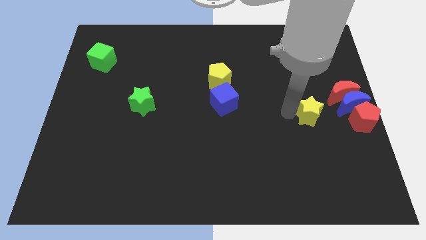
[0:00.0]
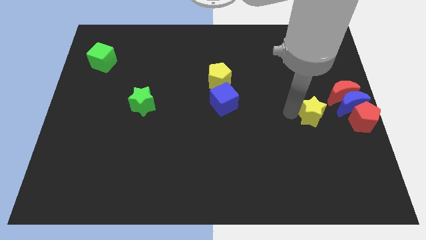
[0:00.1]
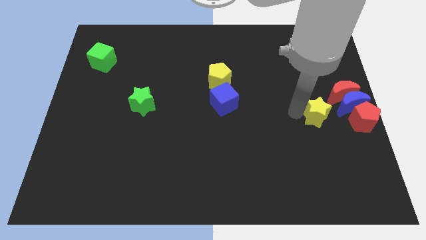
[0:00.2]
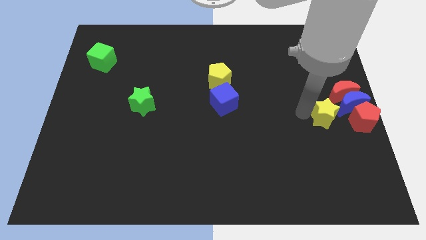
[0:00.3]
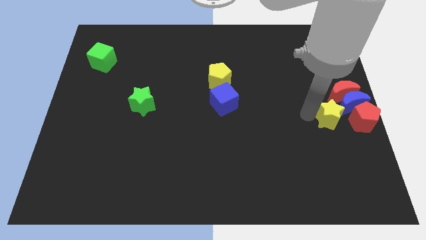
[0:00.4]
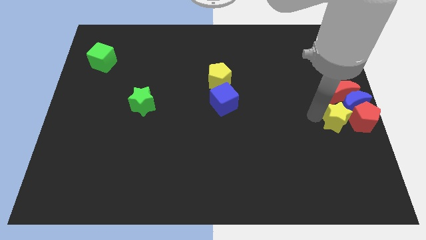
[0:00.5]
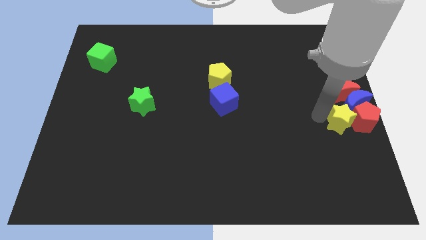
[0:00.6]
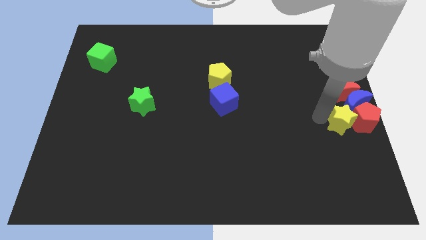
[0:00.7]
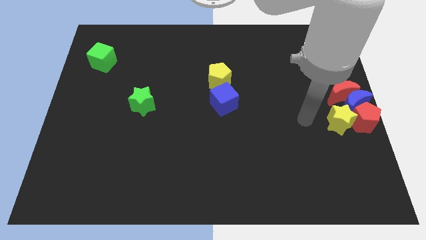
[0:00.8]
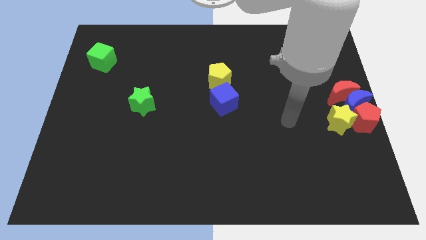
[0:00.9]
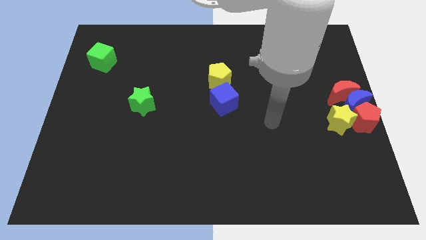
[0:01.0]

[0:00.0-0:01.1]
push the yellow star into the red pentagon

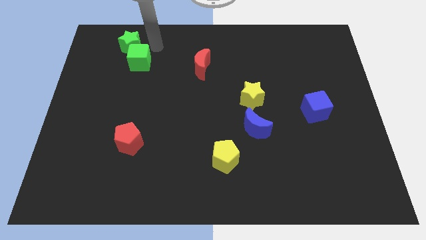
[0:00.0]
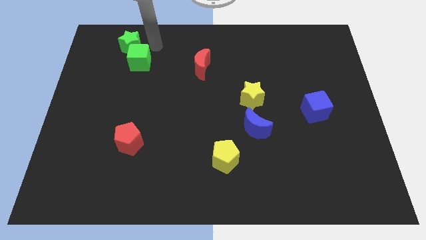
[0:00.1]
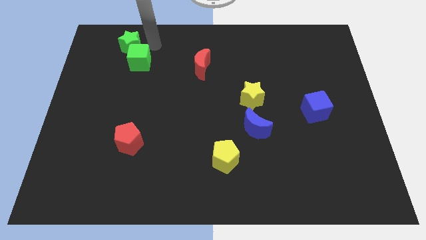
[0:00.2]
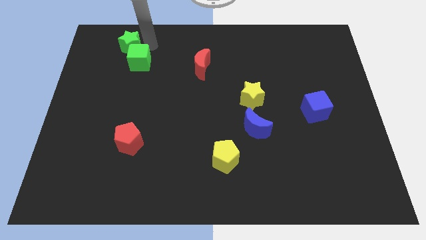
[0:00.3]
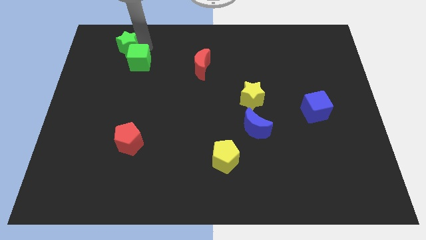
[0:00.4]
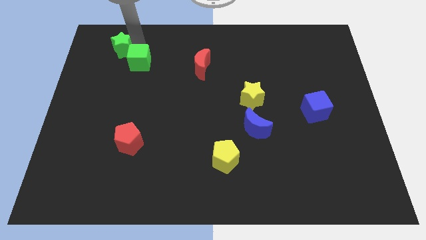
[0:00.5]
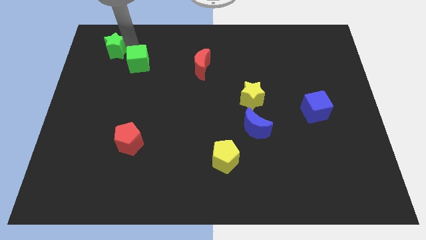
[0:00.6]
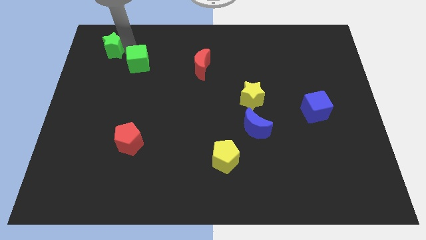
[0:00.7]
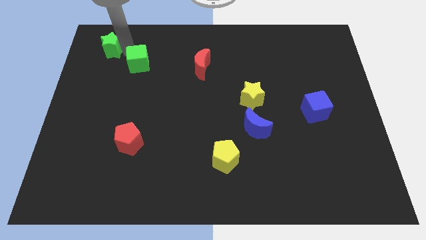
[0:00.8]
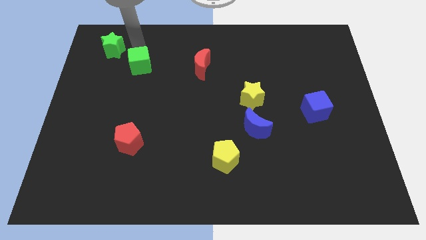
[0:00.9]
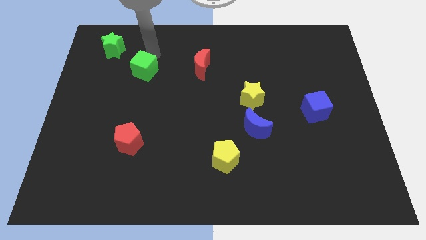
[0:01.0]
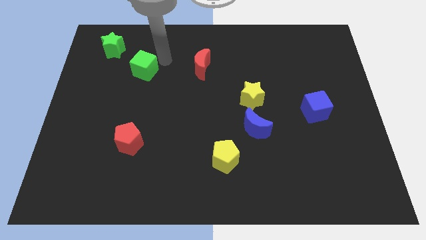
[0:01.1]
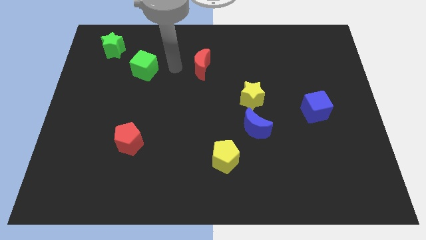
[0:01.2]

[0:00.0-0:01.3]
separate the green star and green cube from each other

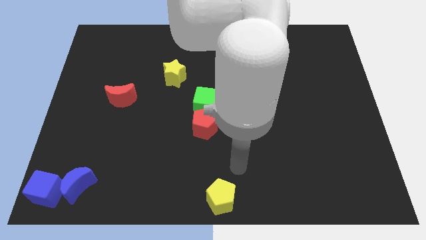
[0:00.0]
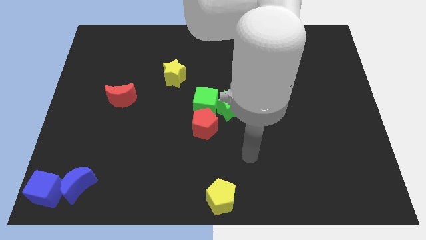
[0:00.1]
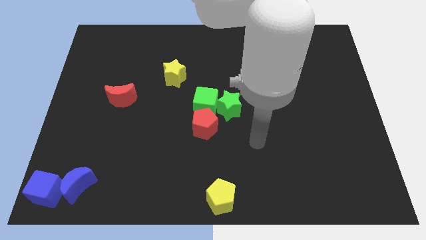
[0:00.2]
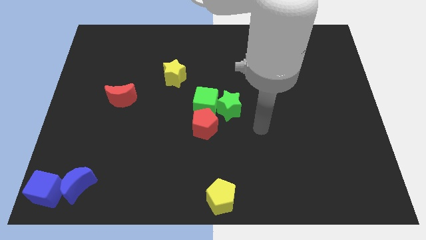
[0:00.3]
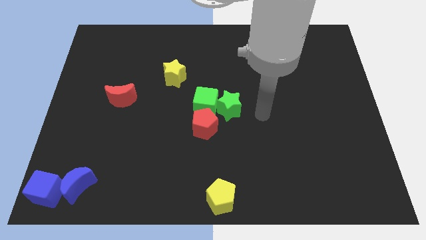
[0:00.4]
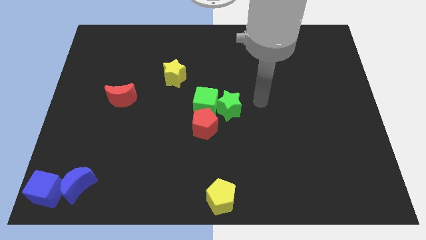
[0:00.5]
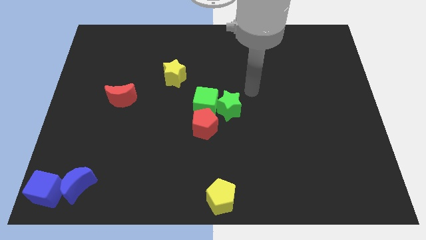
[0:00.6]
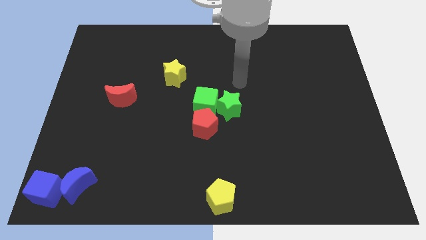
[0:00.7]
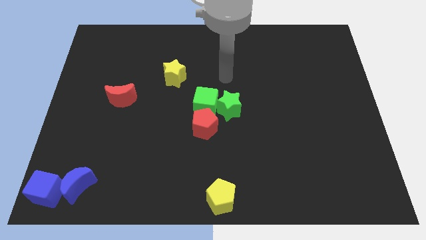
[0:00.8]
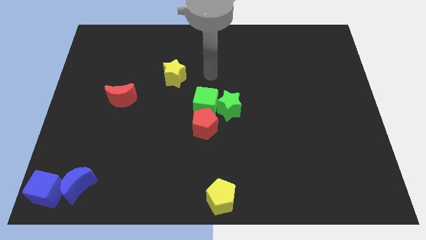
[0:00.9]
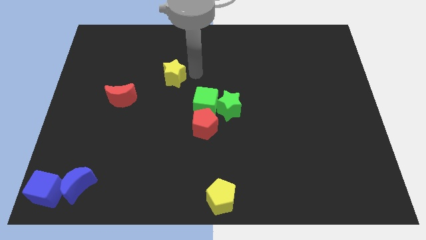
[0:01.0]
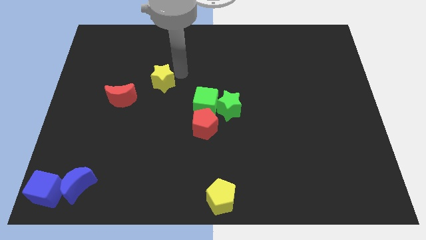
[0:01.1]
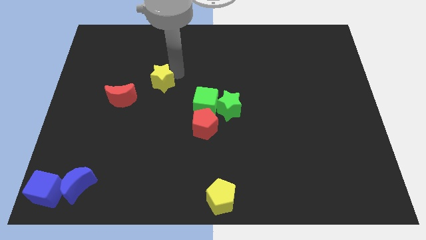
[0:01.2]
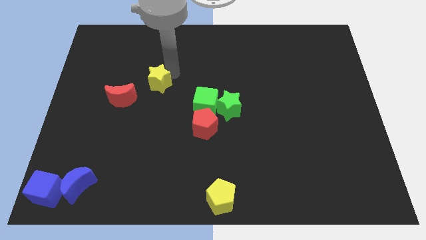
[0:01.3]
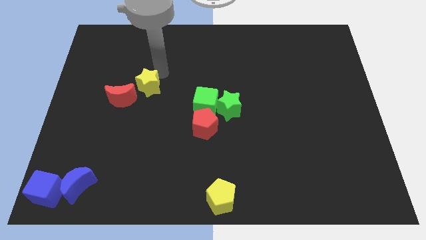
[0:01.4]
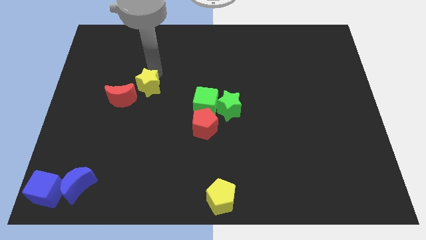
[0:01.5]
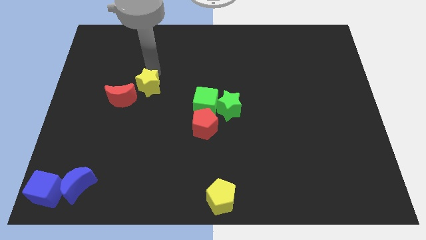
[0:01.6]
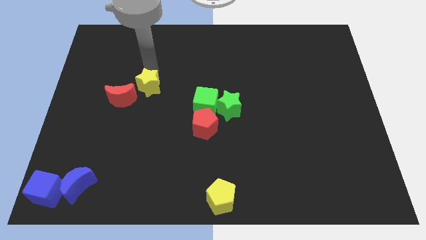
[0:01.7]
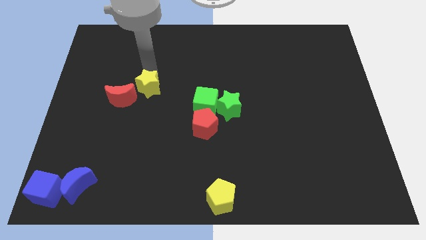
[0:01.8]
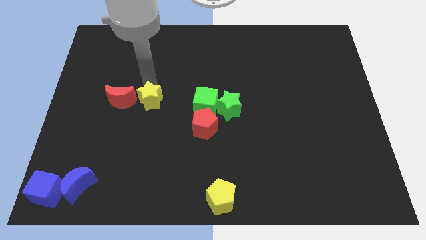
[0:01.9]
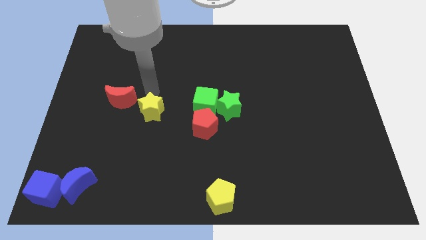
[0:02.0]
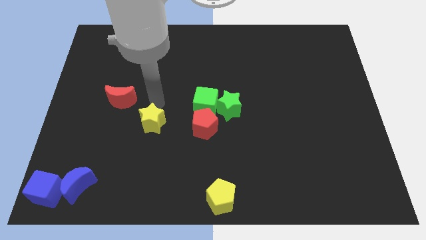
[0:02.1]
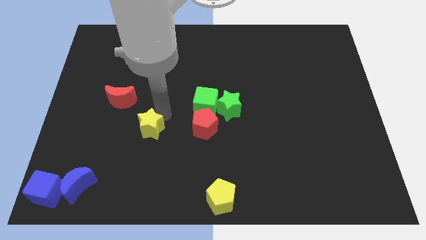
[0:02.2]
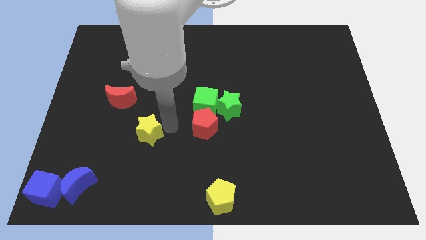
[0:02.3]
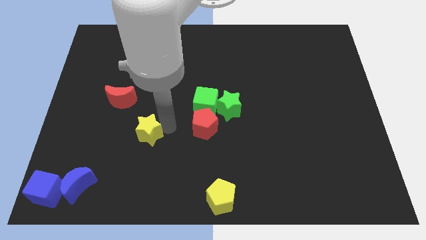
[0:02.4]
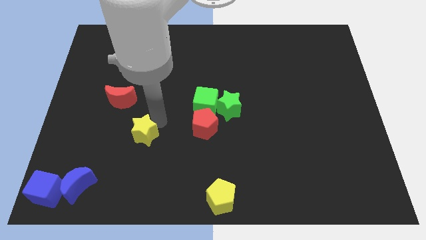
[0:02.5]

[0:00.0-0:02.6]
place the yellow star to the left of the red pentagon

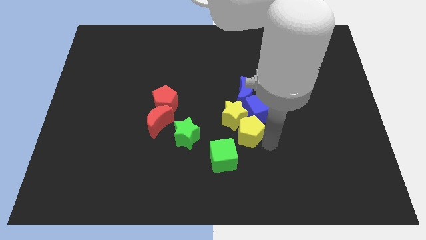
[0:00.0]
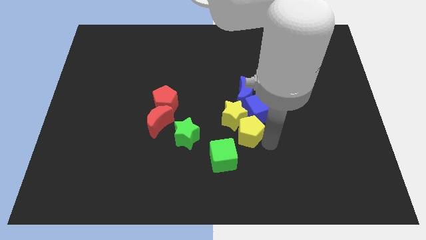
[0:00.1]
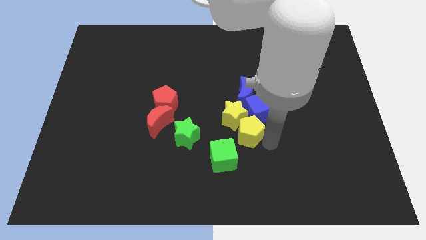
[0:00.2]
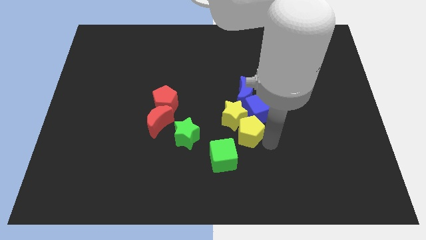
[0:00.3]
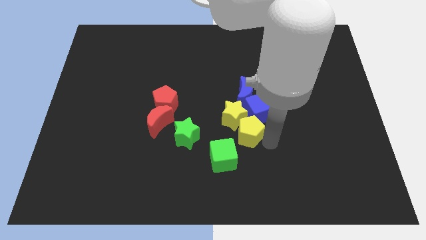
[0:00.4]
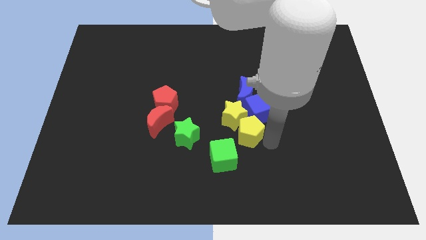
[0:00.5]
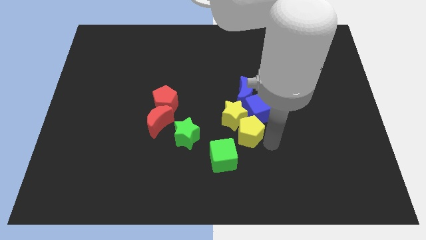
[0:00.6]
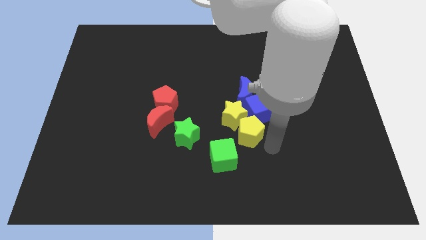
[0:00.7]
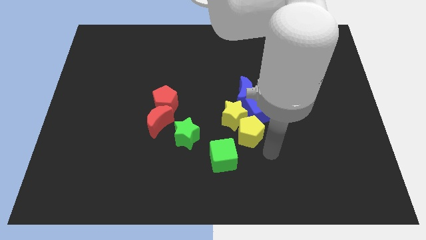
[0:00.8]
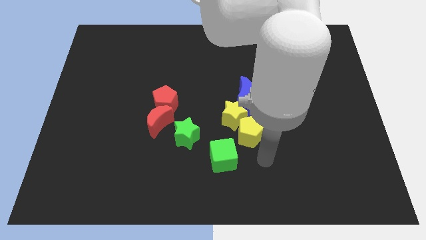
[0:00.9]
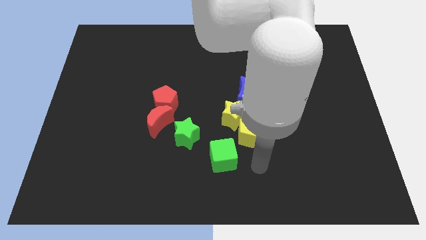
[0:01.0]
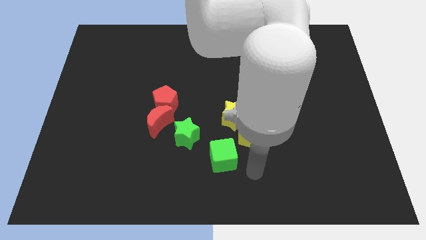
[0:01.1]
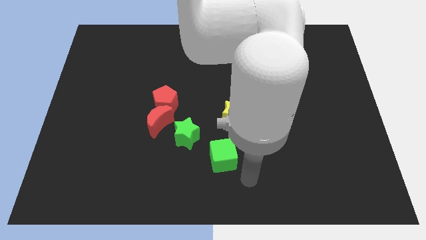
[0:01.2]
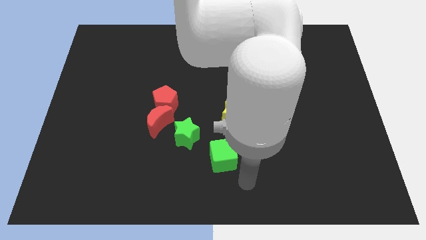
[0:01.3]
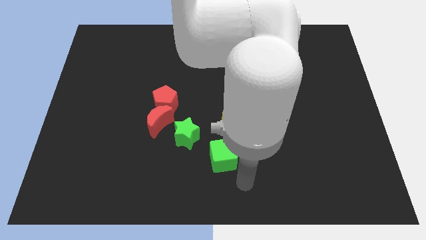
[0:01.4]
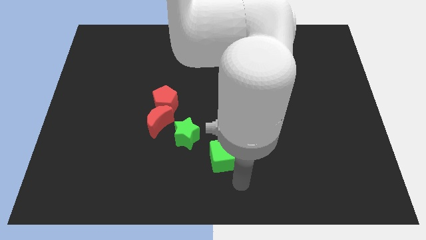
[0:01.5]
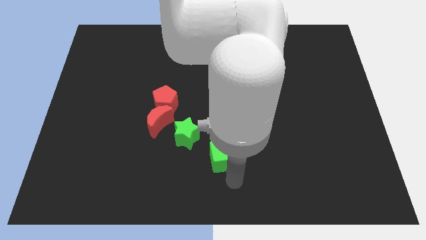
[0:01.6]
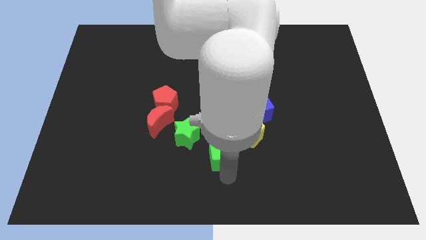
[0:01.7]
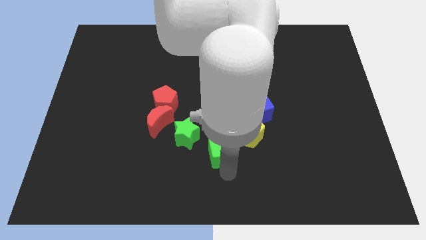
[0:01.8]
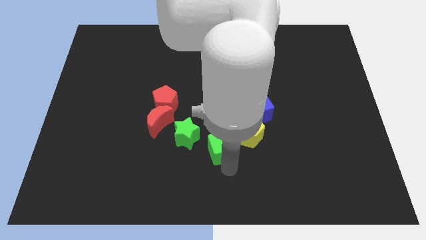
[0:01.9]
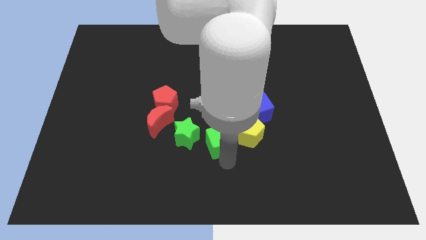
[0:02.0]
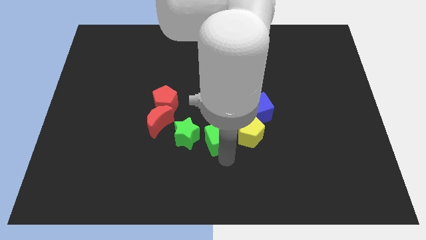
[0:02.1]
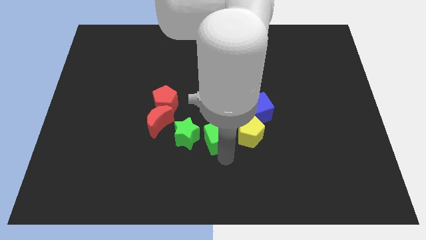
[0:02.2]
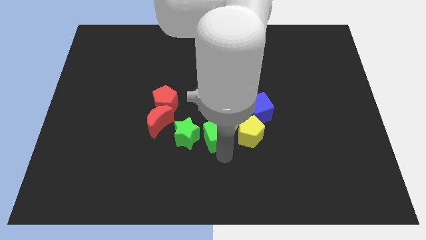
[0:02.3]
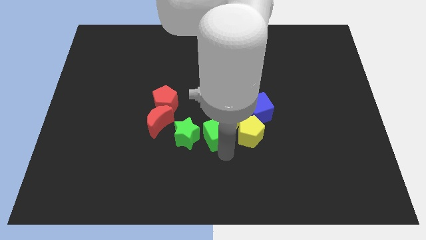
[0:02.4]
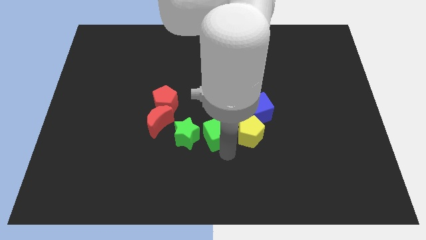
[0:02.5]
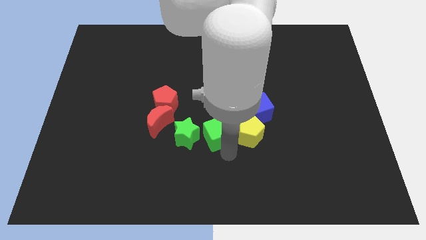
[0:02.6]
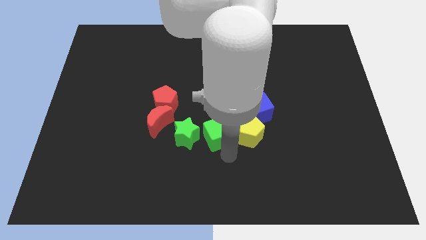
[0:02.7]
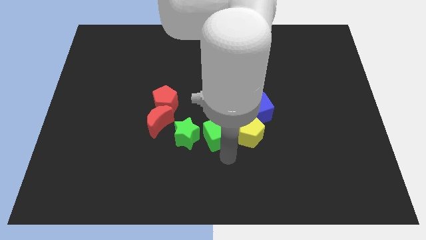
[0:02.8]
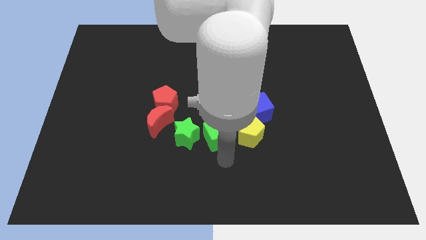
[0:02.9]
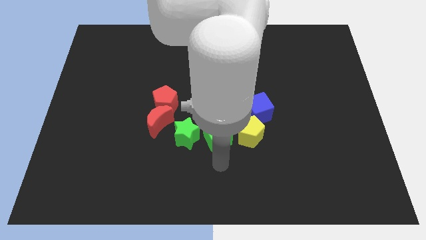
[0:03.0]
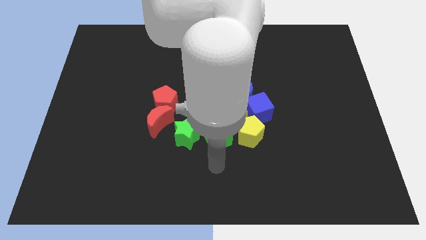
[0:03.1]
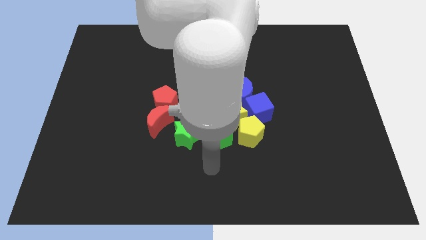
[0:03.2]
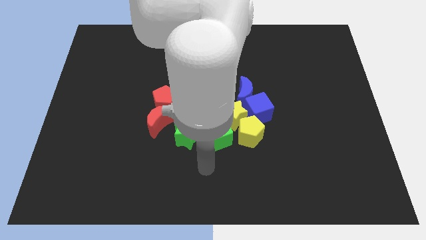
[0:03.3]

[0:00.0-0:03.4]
push the green cube in between the green star and the yellow pentagon

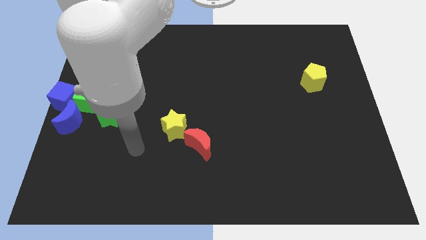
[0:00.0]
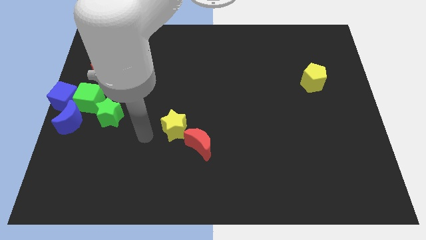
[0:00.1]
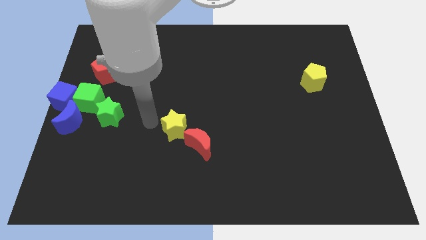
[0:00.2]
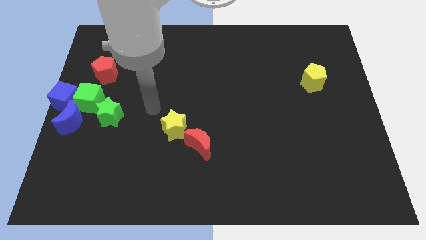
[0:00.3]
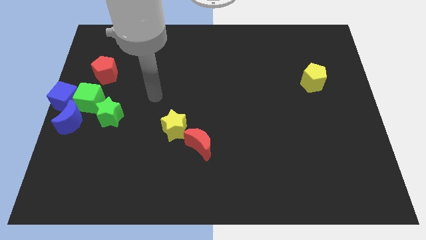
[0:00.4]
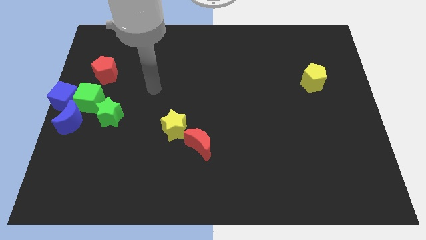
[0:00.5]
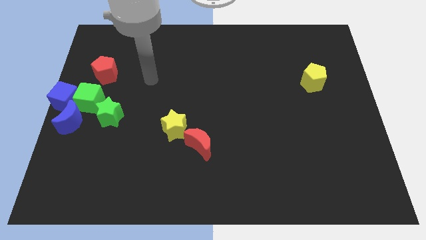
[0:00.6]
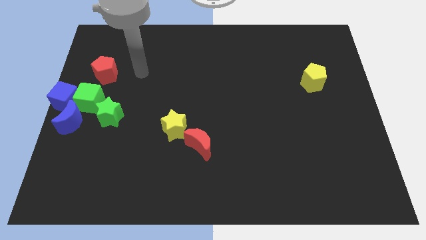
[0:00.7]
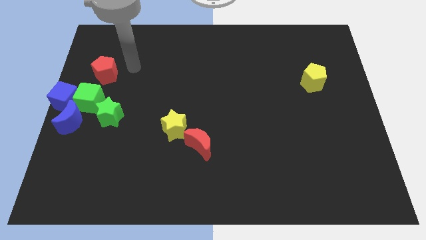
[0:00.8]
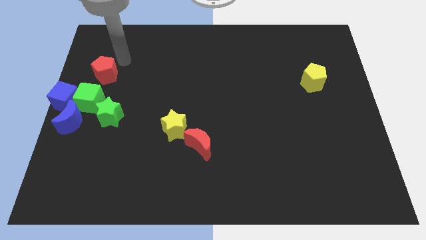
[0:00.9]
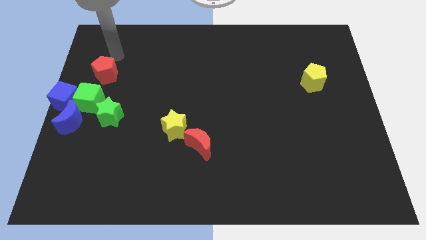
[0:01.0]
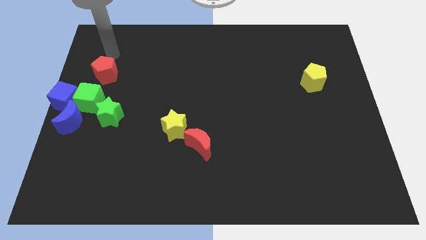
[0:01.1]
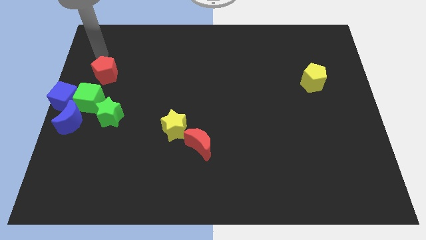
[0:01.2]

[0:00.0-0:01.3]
move your arm towards the red pentagon
